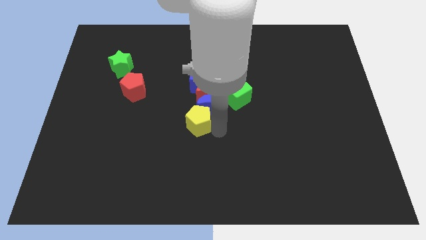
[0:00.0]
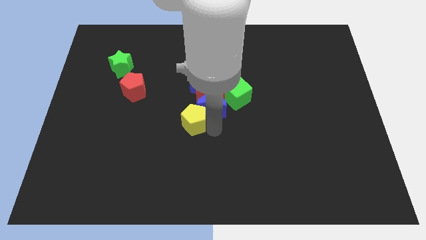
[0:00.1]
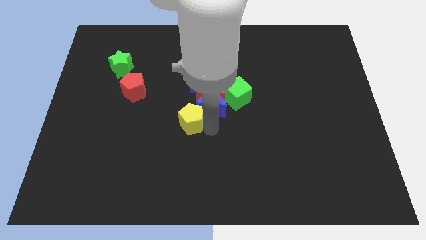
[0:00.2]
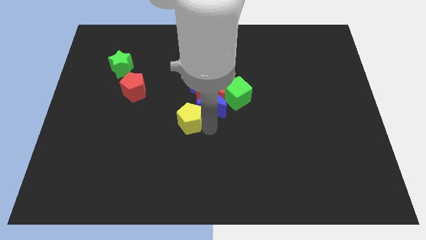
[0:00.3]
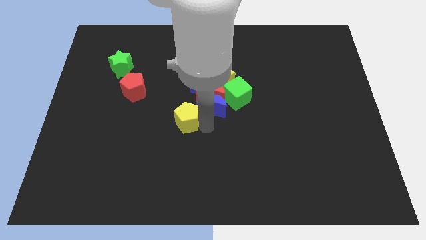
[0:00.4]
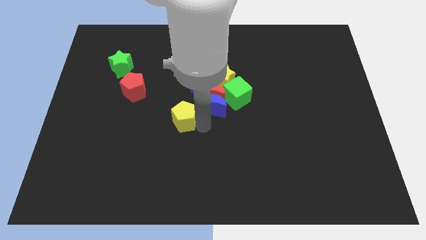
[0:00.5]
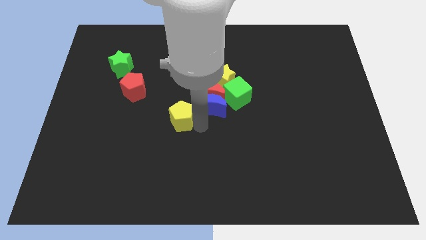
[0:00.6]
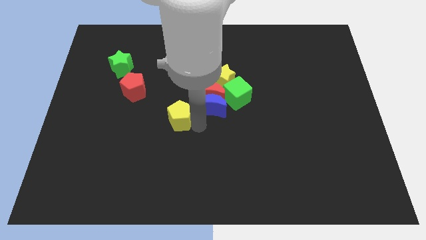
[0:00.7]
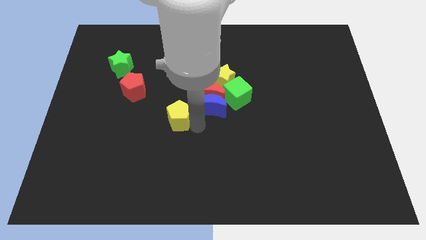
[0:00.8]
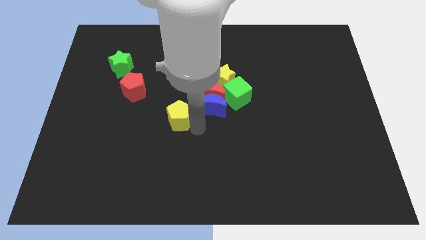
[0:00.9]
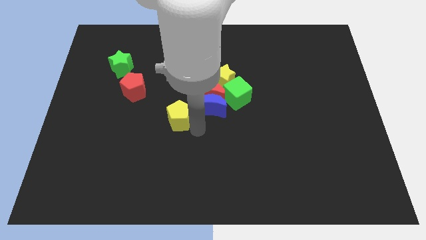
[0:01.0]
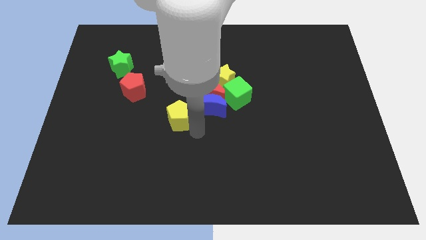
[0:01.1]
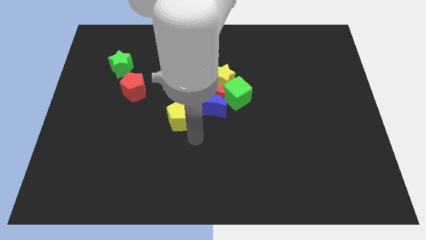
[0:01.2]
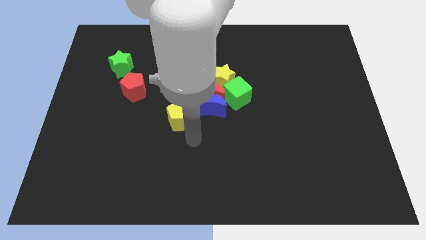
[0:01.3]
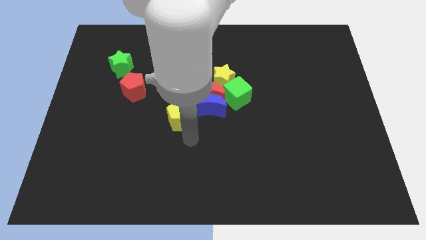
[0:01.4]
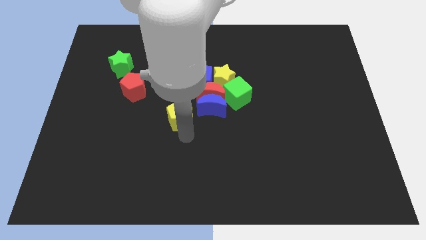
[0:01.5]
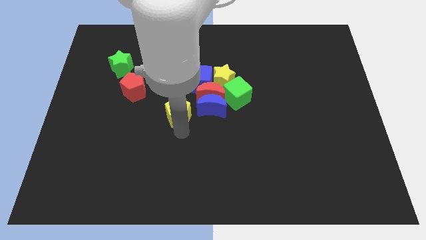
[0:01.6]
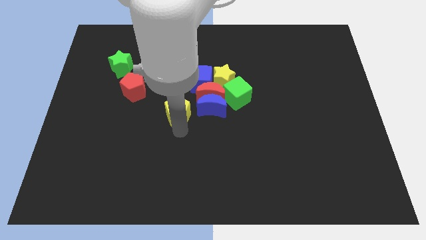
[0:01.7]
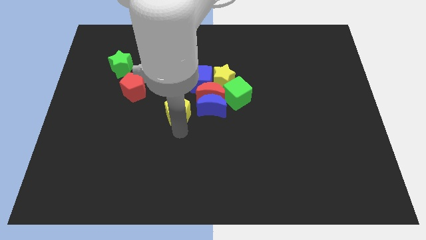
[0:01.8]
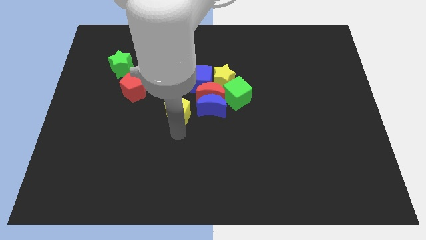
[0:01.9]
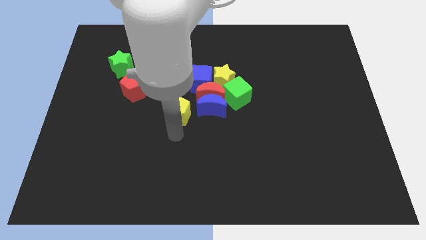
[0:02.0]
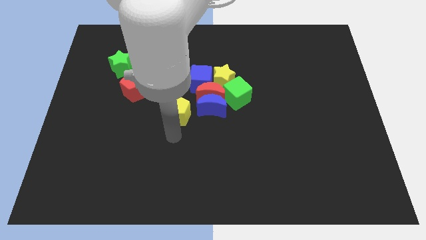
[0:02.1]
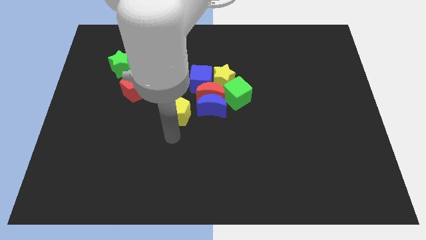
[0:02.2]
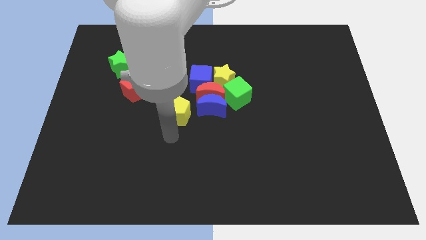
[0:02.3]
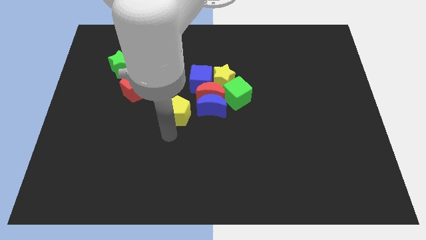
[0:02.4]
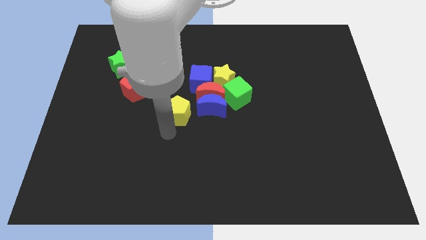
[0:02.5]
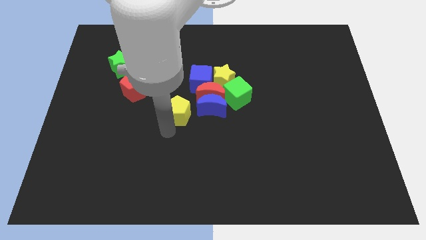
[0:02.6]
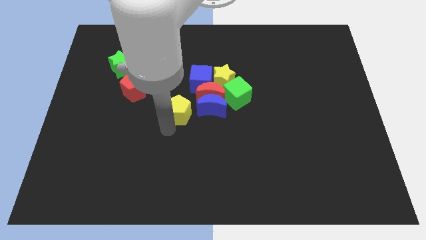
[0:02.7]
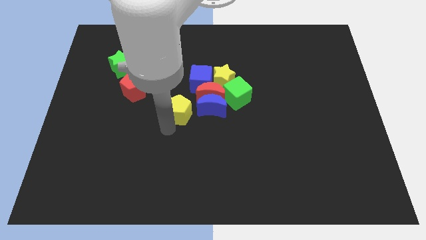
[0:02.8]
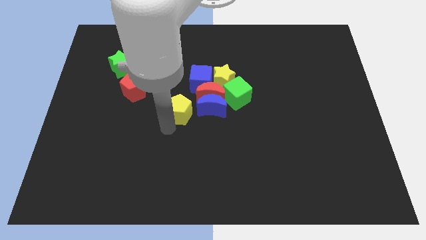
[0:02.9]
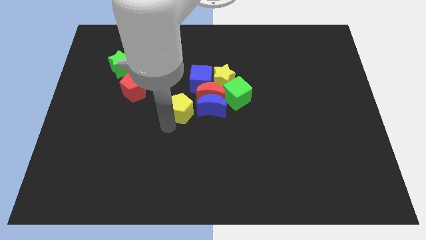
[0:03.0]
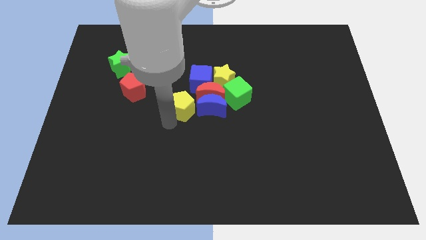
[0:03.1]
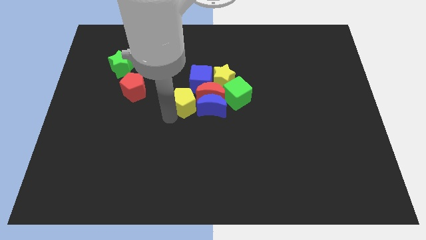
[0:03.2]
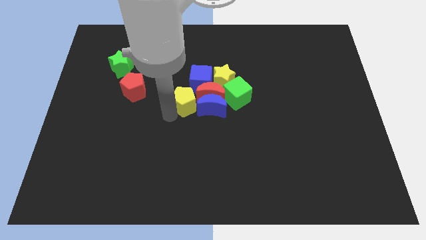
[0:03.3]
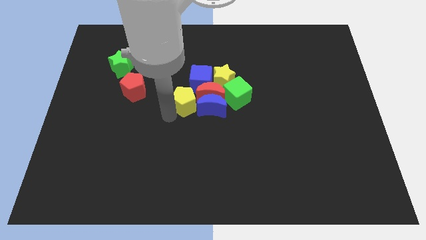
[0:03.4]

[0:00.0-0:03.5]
move yellow pentagon to the left of blue crescent

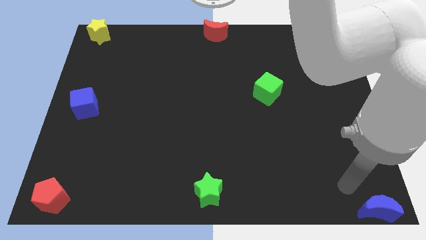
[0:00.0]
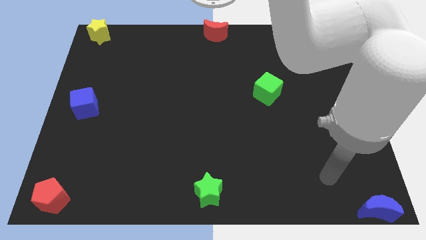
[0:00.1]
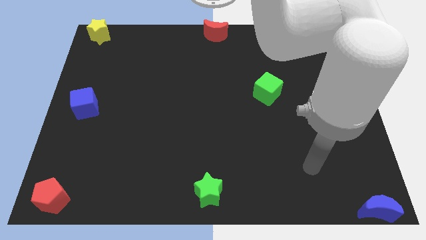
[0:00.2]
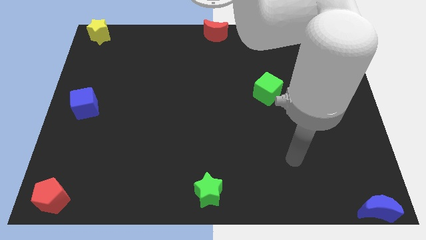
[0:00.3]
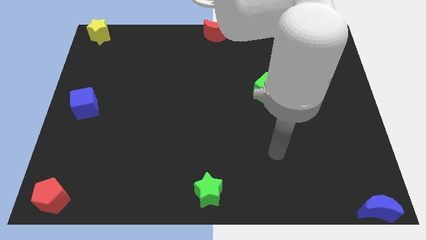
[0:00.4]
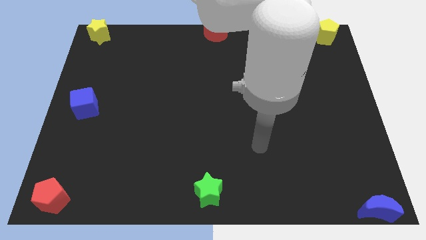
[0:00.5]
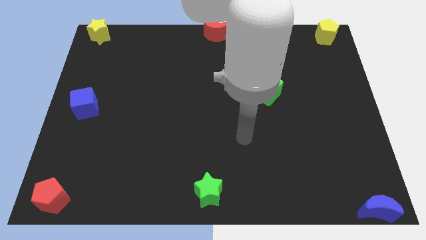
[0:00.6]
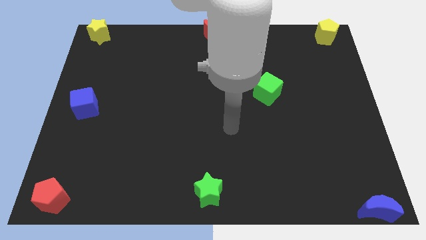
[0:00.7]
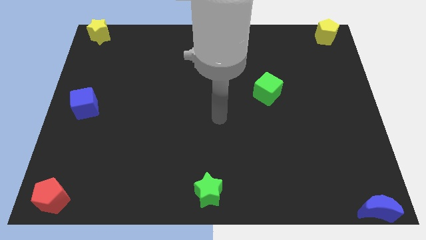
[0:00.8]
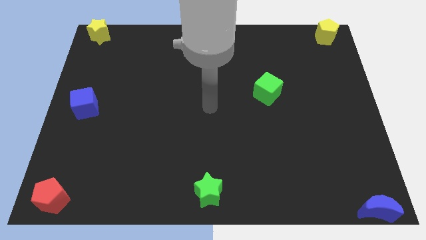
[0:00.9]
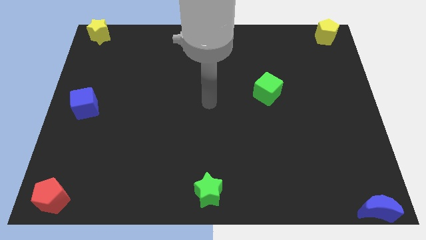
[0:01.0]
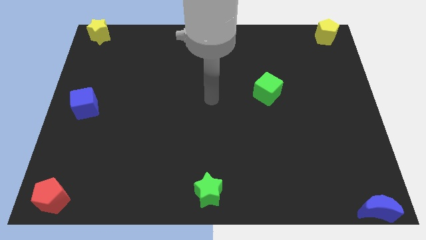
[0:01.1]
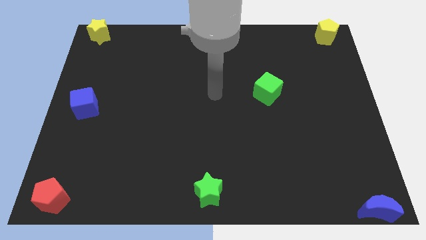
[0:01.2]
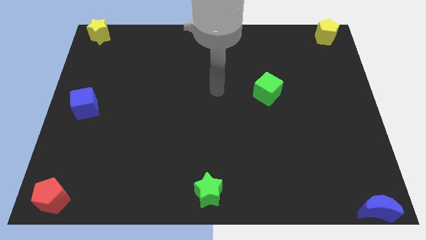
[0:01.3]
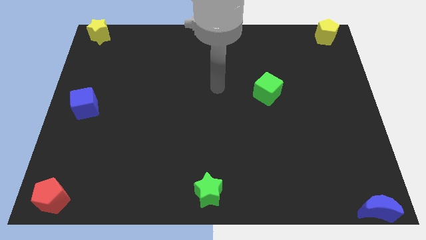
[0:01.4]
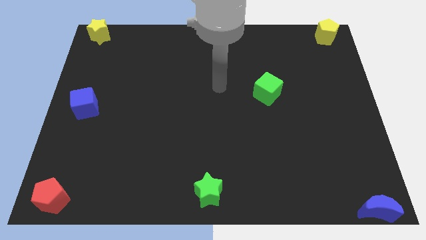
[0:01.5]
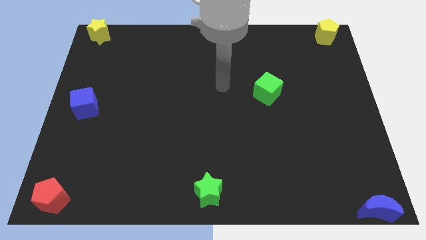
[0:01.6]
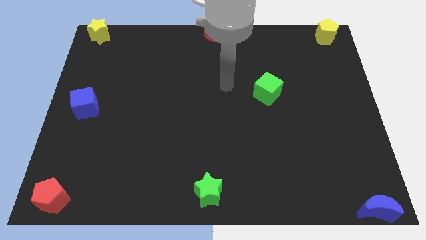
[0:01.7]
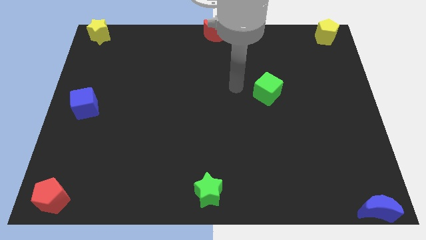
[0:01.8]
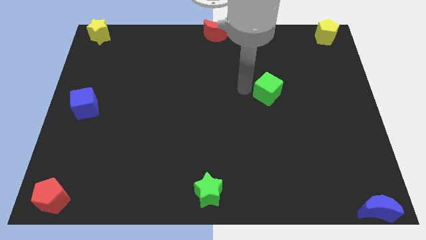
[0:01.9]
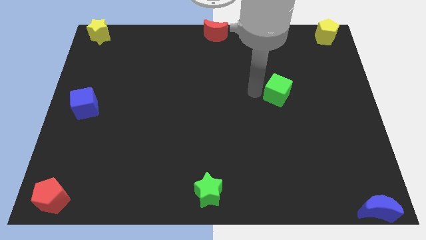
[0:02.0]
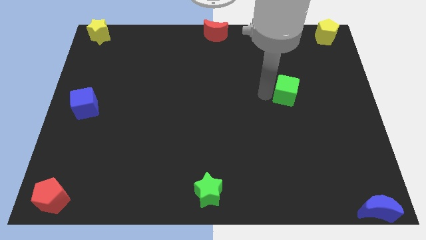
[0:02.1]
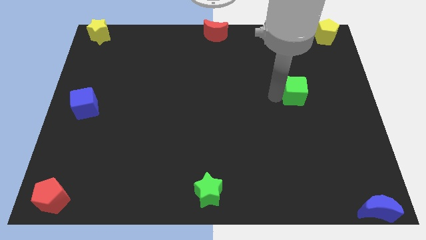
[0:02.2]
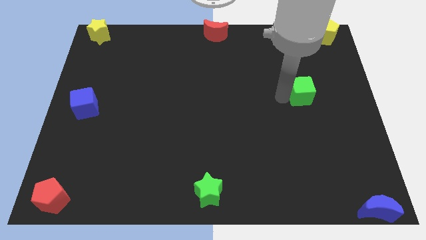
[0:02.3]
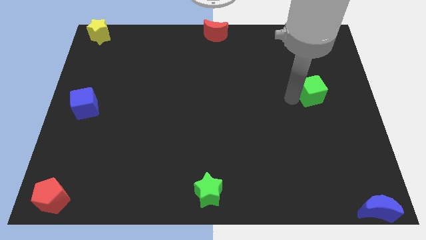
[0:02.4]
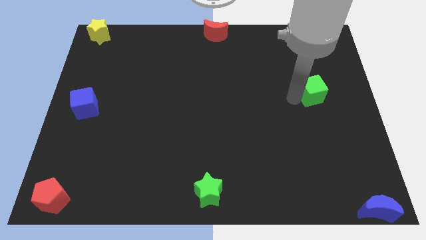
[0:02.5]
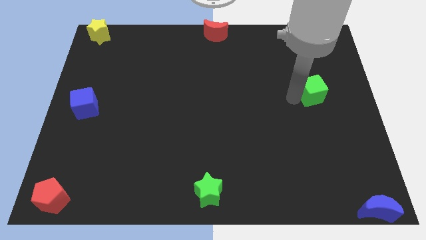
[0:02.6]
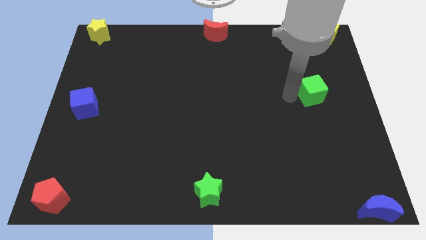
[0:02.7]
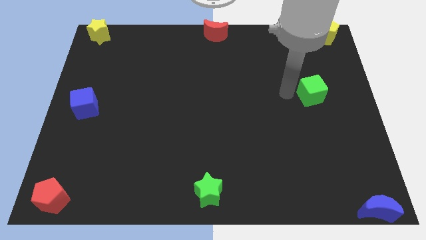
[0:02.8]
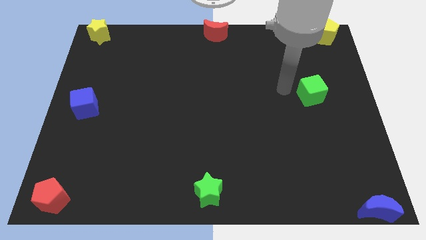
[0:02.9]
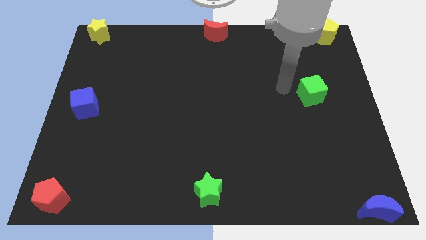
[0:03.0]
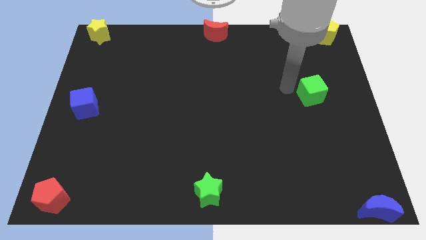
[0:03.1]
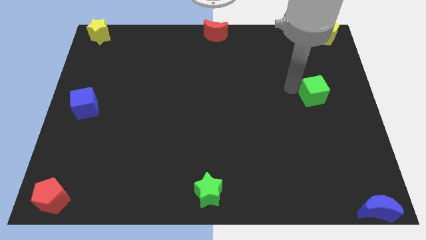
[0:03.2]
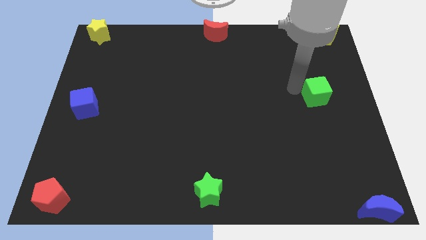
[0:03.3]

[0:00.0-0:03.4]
push the green cube slightly to the right of the board

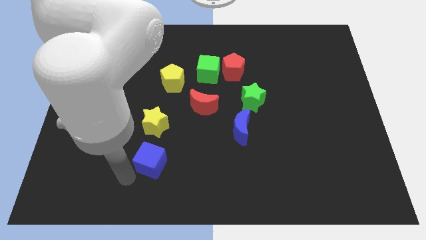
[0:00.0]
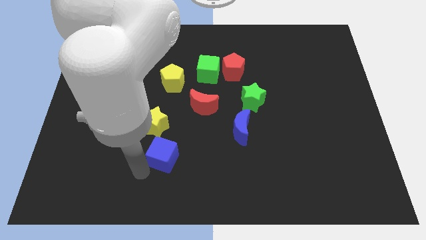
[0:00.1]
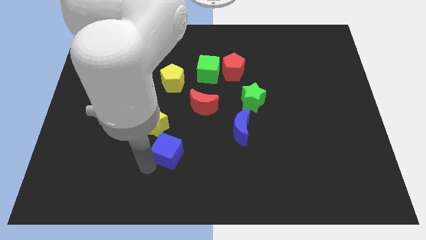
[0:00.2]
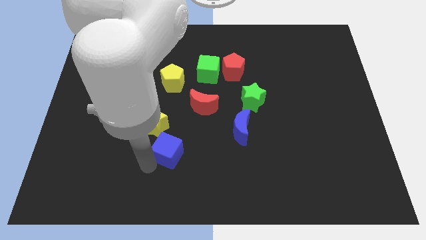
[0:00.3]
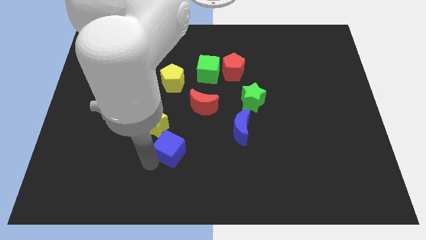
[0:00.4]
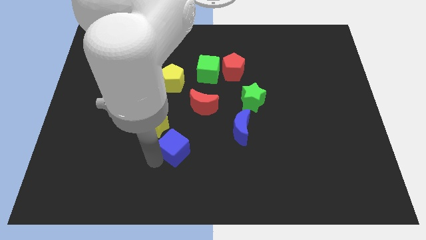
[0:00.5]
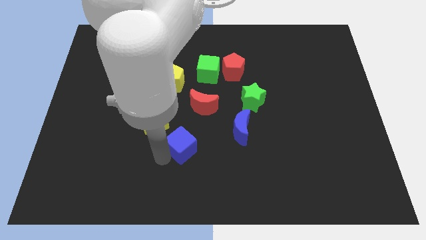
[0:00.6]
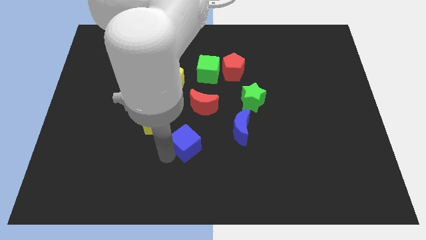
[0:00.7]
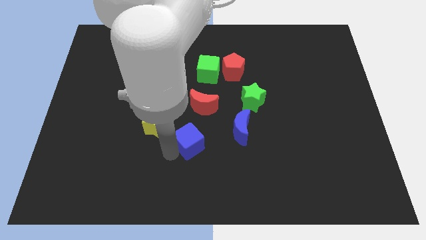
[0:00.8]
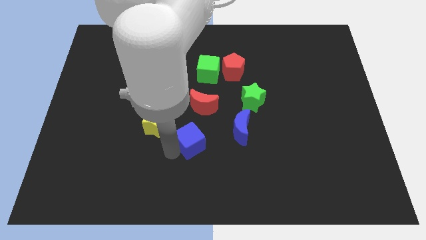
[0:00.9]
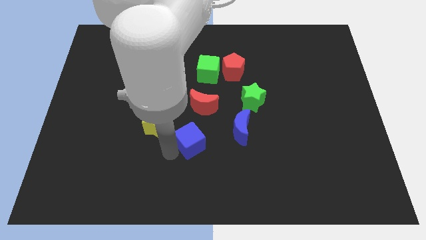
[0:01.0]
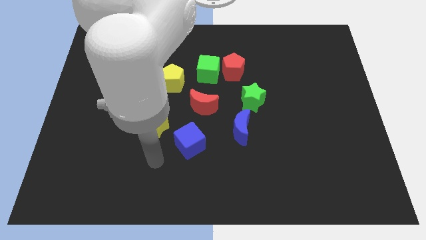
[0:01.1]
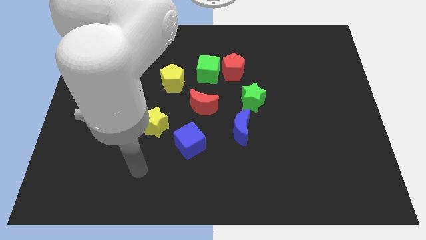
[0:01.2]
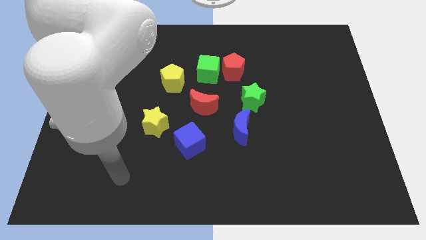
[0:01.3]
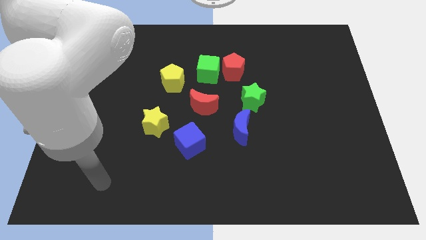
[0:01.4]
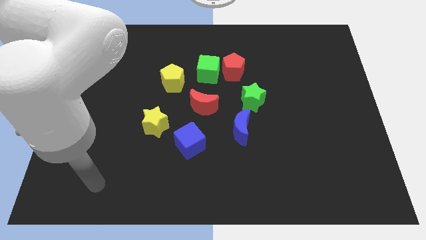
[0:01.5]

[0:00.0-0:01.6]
push the blue cube towards the red moon

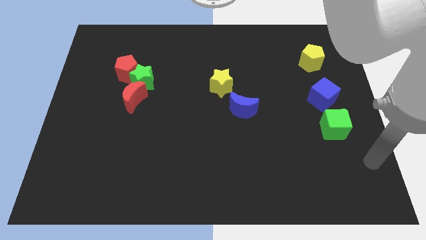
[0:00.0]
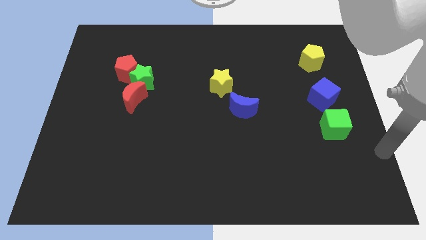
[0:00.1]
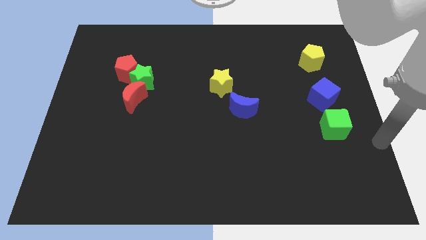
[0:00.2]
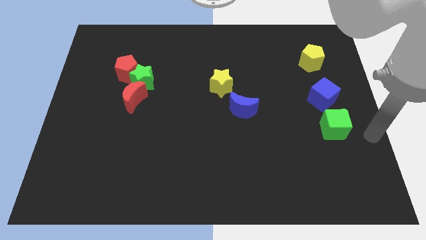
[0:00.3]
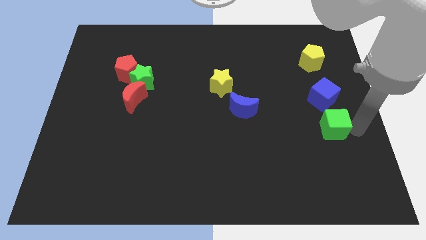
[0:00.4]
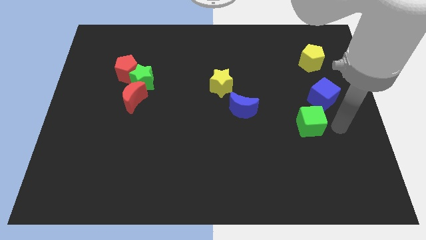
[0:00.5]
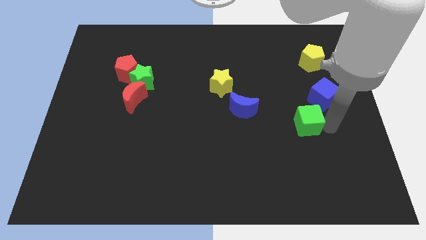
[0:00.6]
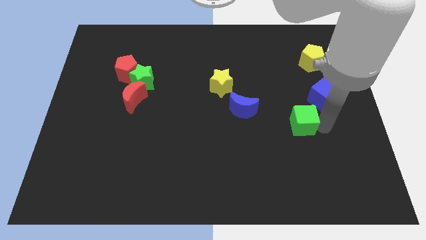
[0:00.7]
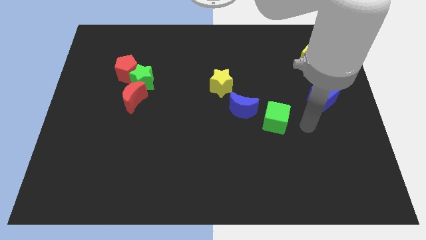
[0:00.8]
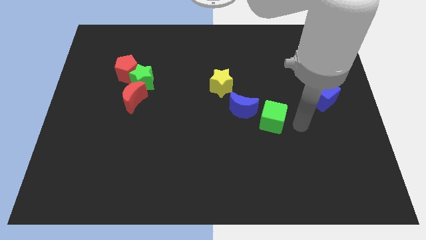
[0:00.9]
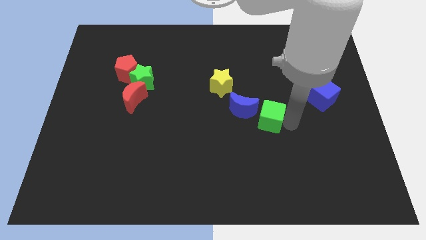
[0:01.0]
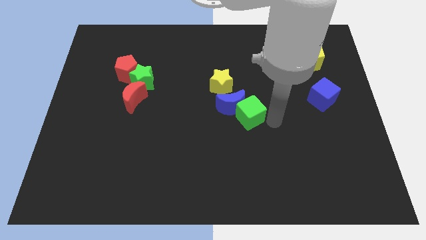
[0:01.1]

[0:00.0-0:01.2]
move the green cube to the right side of the blue moon
